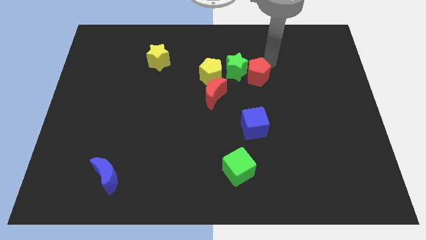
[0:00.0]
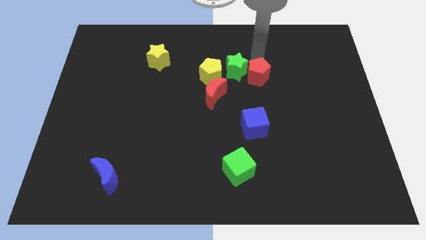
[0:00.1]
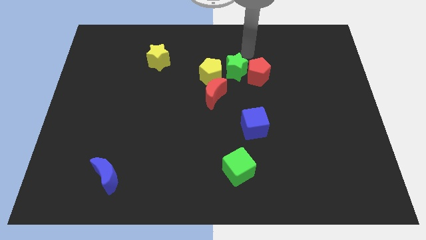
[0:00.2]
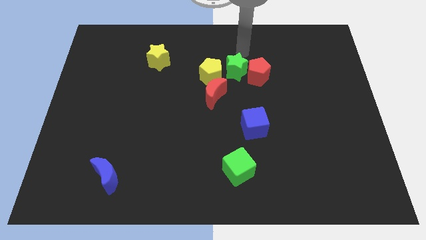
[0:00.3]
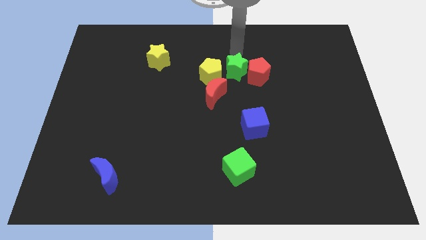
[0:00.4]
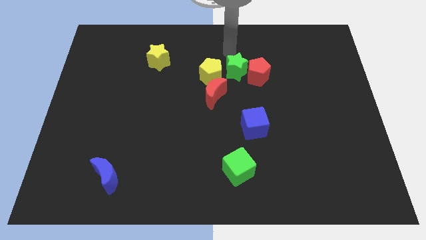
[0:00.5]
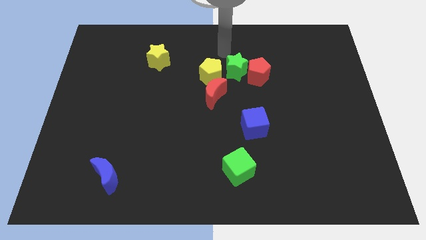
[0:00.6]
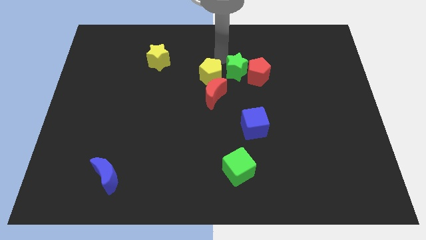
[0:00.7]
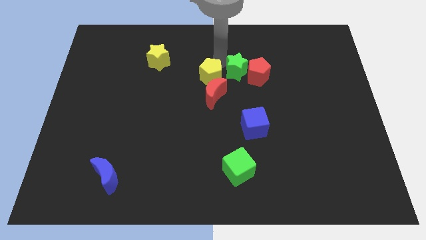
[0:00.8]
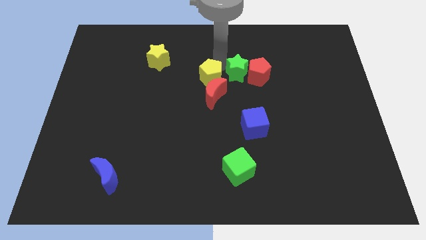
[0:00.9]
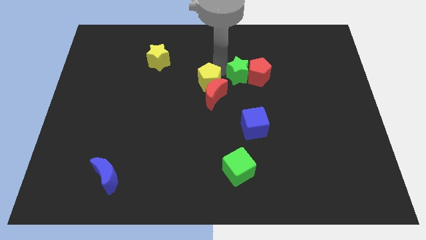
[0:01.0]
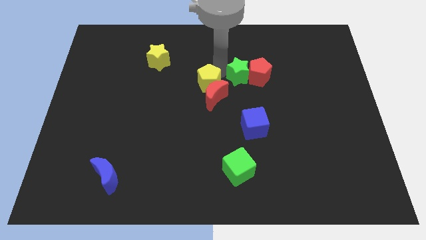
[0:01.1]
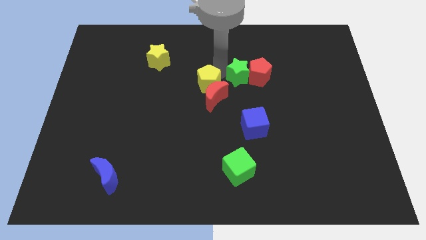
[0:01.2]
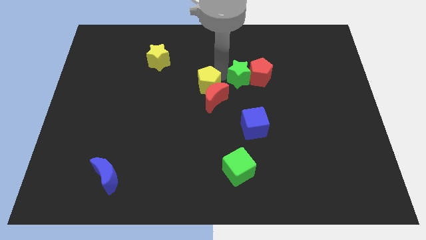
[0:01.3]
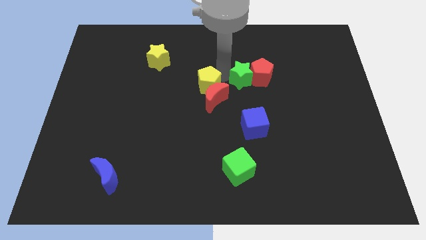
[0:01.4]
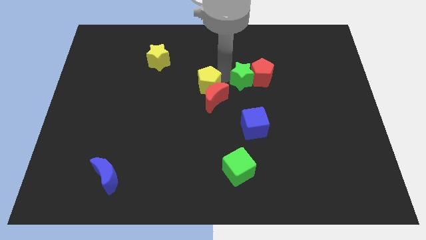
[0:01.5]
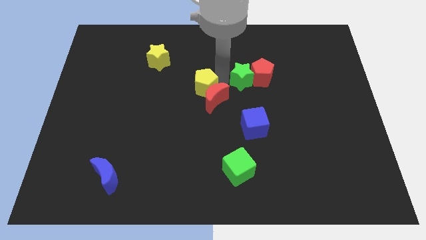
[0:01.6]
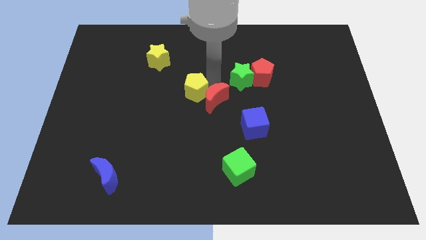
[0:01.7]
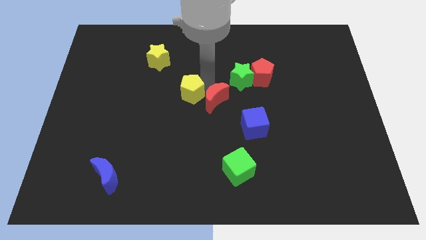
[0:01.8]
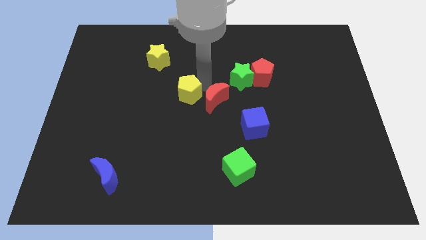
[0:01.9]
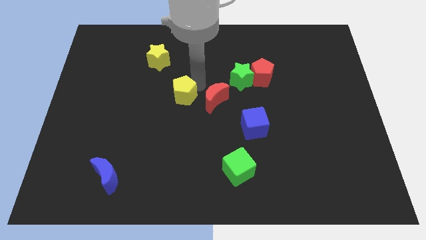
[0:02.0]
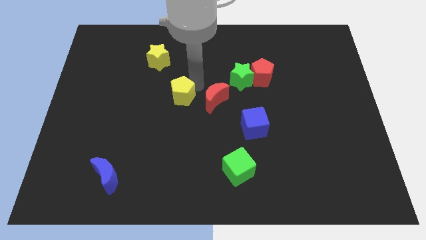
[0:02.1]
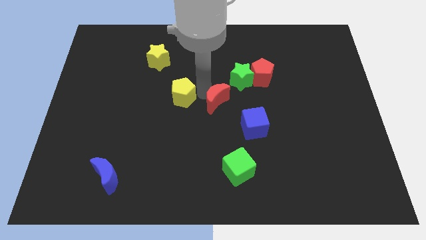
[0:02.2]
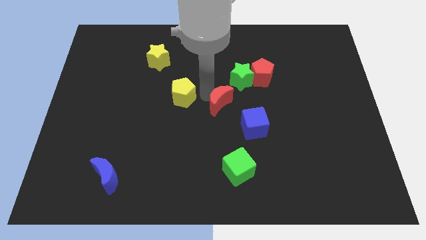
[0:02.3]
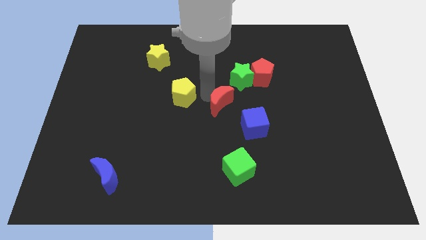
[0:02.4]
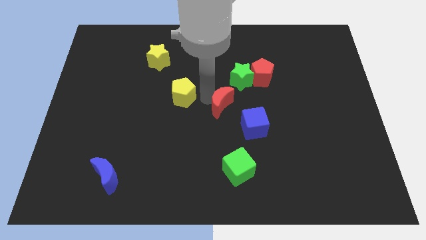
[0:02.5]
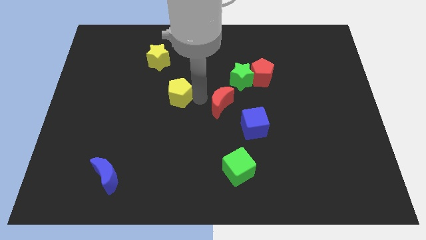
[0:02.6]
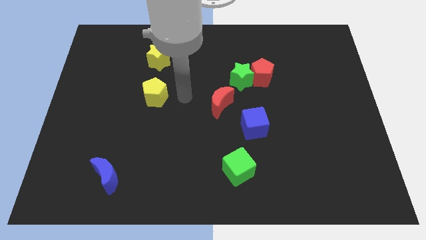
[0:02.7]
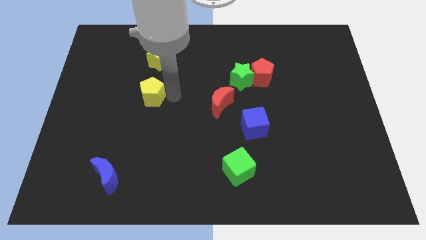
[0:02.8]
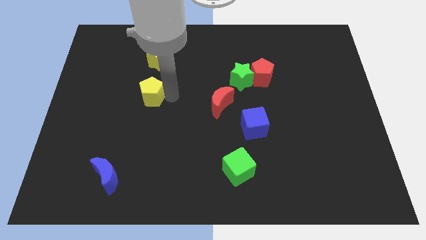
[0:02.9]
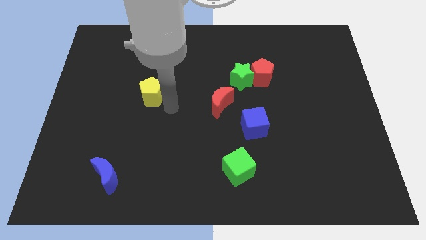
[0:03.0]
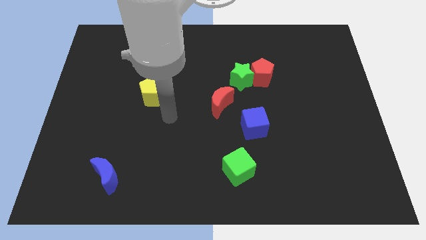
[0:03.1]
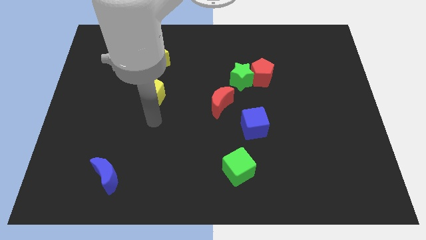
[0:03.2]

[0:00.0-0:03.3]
slide the yellow pentagon towards the left side of the board

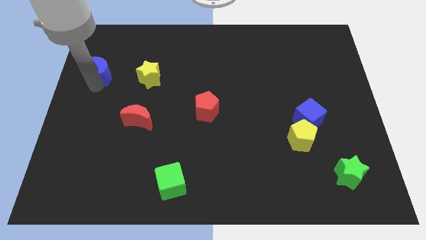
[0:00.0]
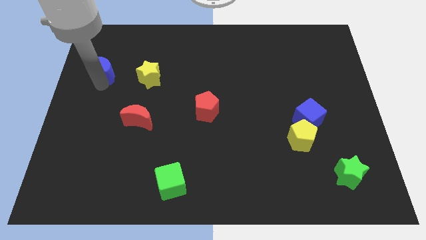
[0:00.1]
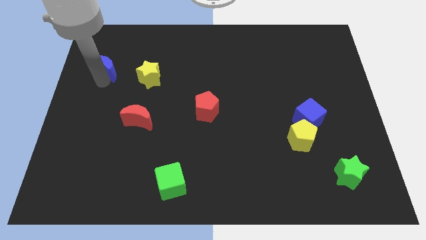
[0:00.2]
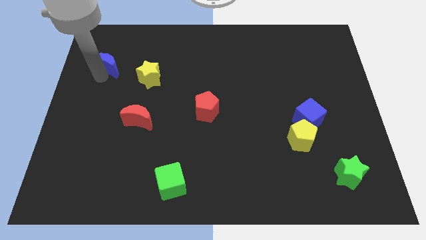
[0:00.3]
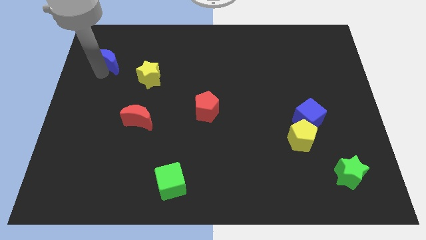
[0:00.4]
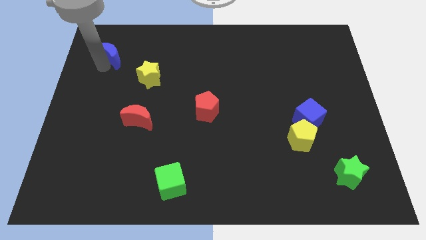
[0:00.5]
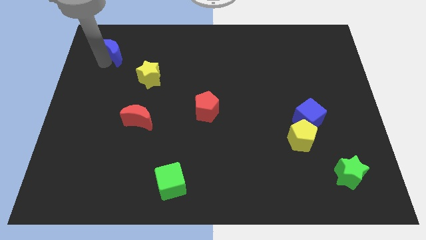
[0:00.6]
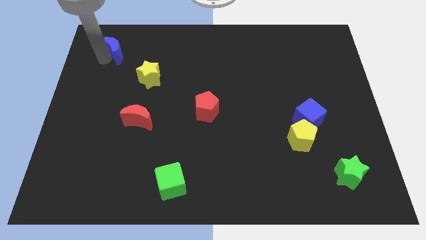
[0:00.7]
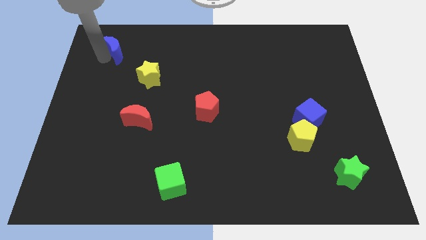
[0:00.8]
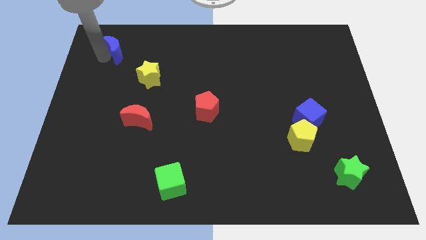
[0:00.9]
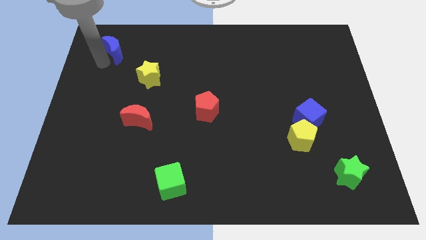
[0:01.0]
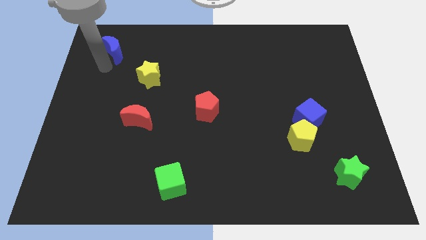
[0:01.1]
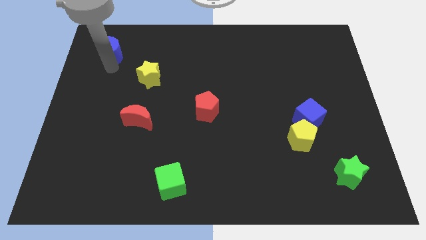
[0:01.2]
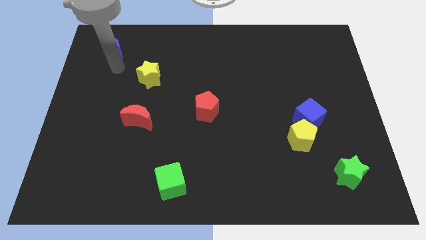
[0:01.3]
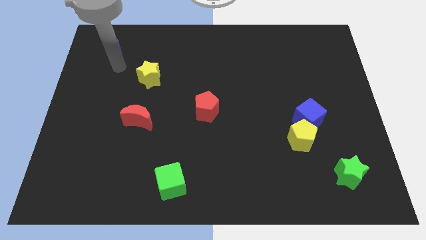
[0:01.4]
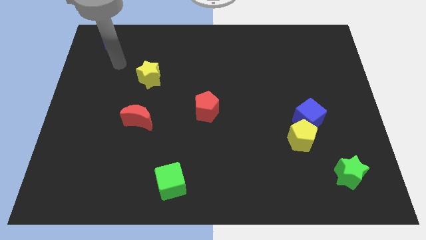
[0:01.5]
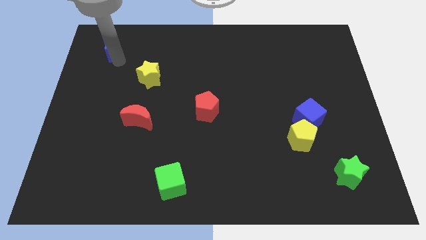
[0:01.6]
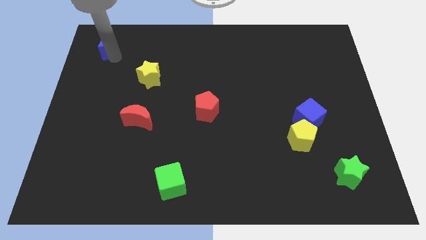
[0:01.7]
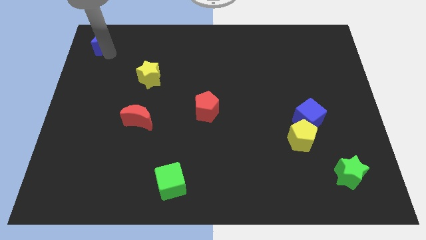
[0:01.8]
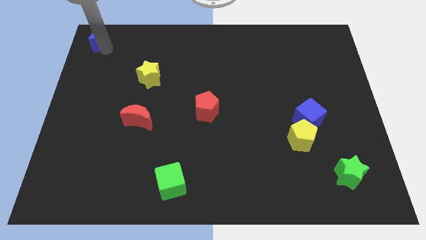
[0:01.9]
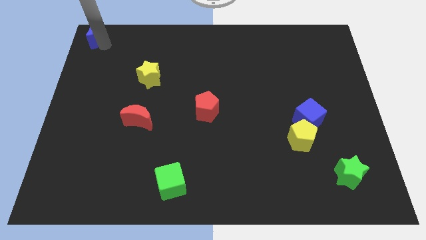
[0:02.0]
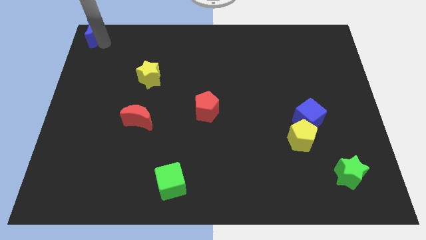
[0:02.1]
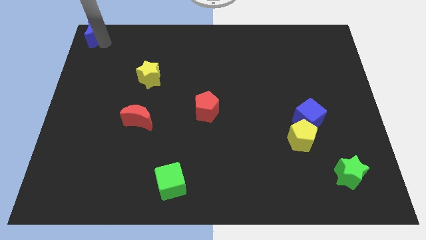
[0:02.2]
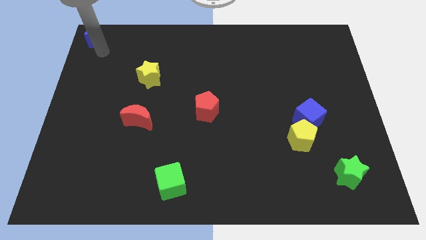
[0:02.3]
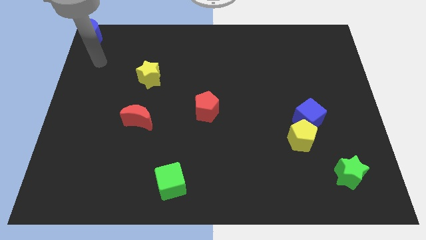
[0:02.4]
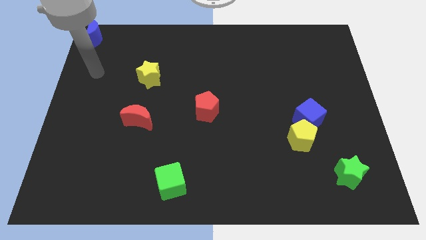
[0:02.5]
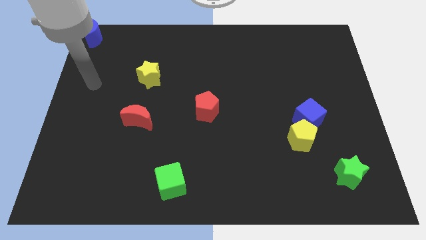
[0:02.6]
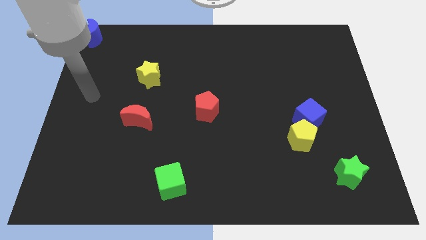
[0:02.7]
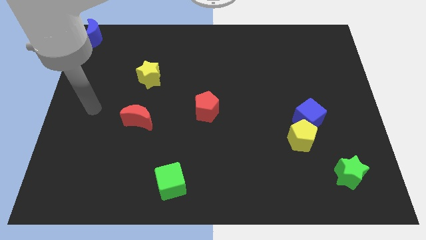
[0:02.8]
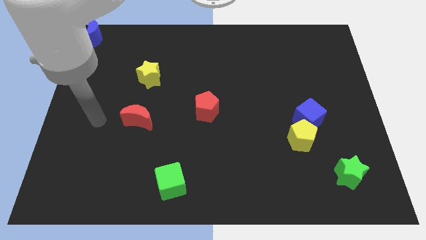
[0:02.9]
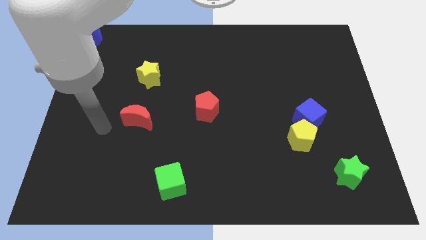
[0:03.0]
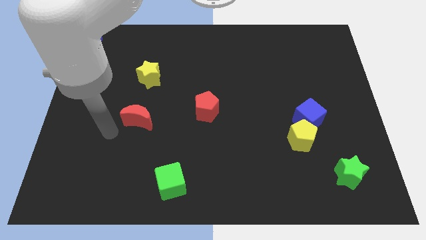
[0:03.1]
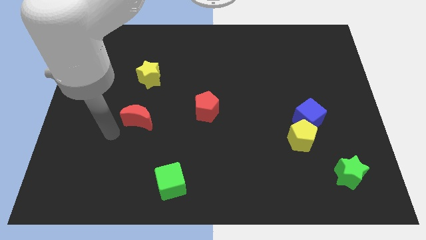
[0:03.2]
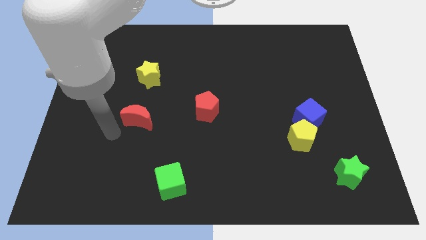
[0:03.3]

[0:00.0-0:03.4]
move blue moon top left corner

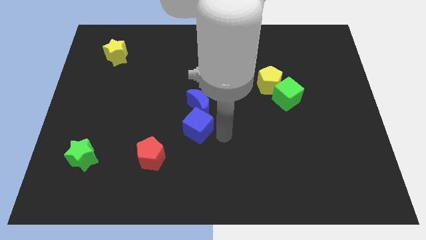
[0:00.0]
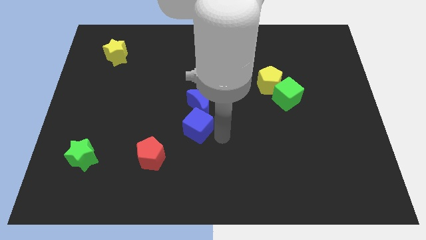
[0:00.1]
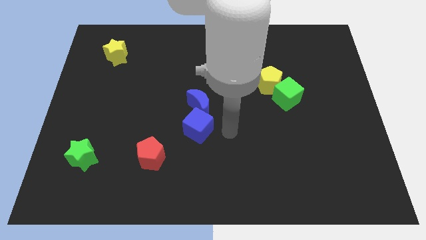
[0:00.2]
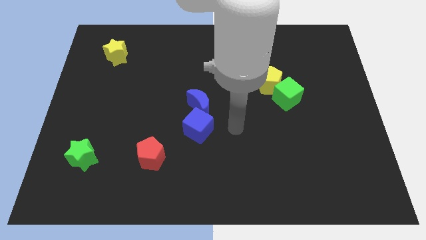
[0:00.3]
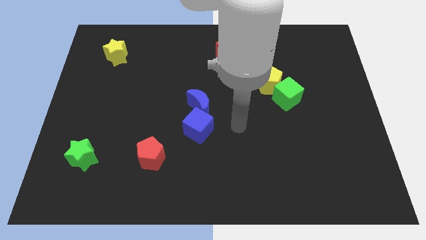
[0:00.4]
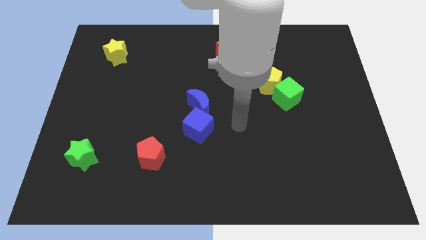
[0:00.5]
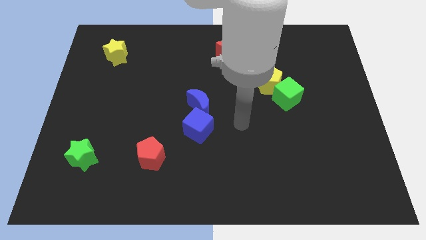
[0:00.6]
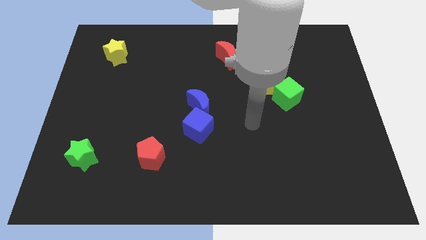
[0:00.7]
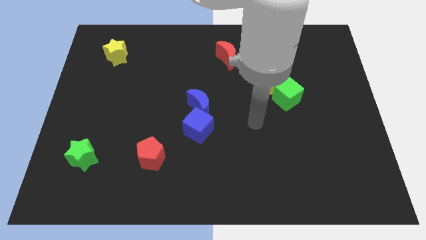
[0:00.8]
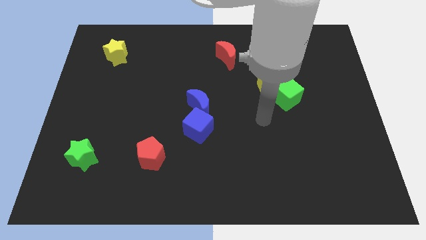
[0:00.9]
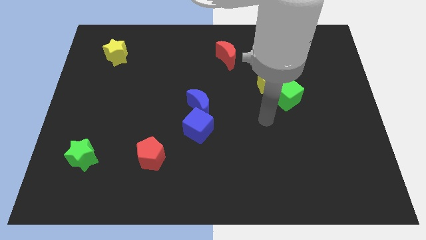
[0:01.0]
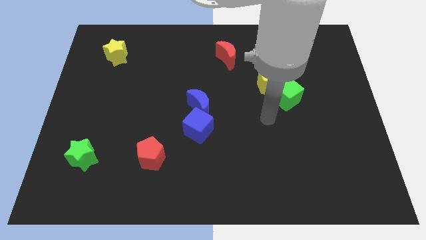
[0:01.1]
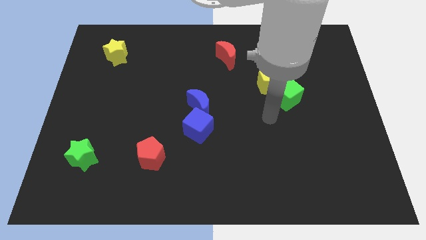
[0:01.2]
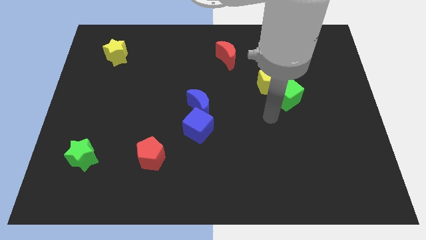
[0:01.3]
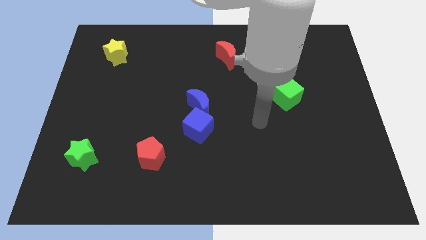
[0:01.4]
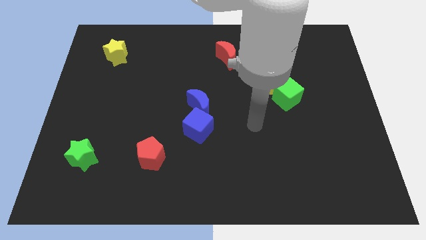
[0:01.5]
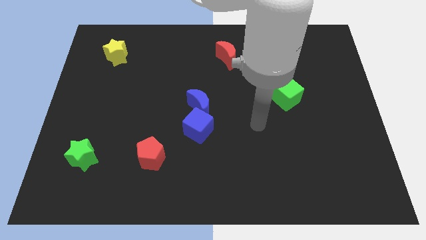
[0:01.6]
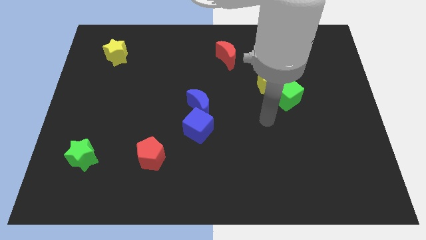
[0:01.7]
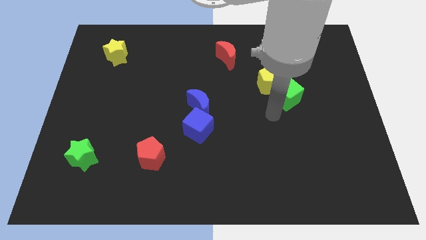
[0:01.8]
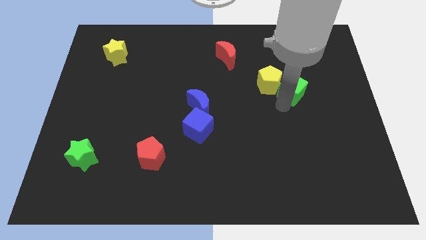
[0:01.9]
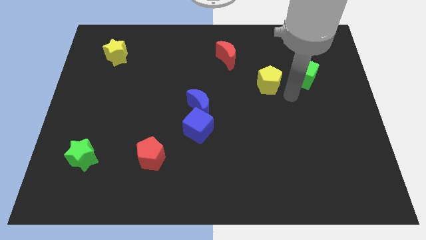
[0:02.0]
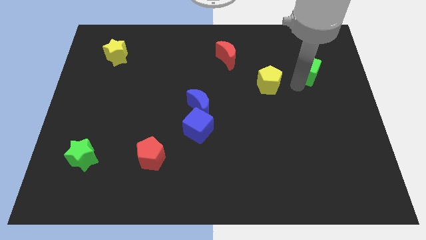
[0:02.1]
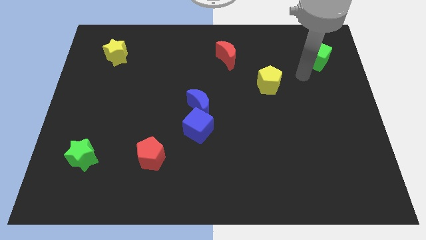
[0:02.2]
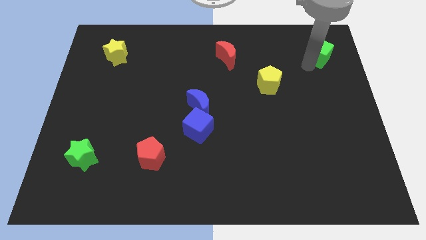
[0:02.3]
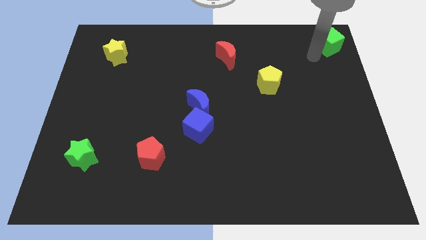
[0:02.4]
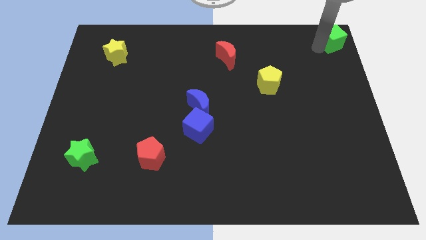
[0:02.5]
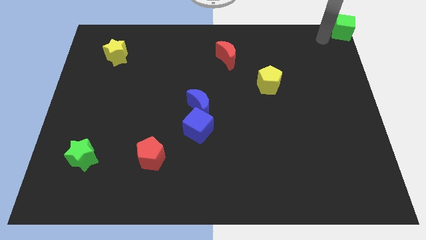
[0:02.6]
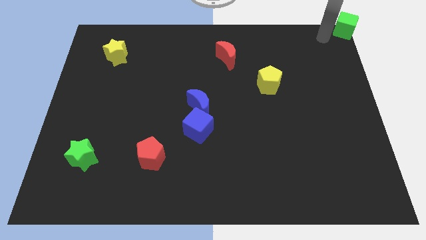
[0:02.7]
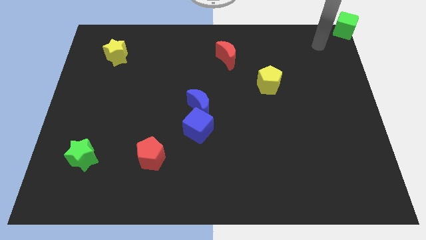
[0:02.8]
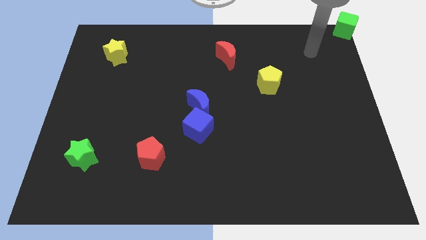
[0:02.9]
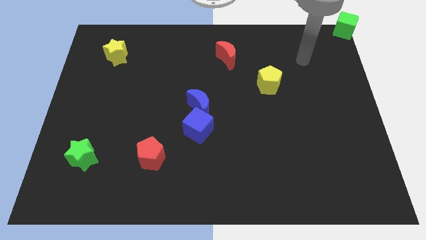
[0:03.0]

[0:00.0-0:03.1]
apart green cube from yellow pentagon
